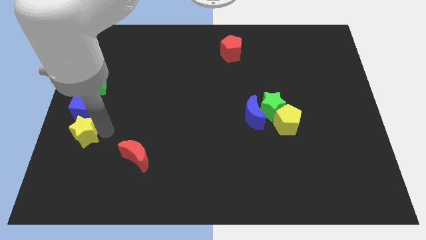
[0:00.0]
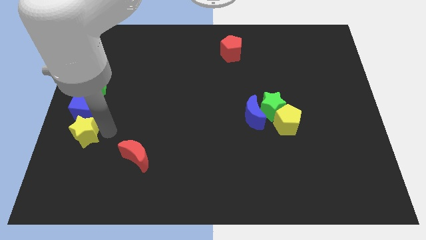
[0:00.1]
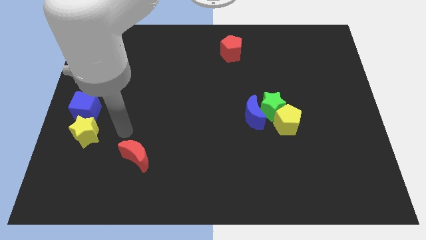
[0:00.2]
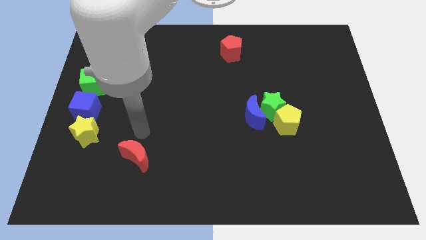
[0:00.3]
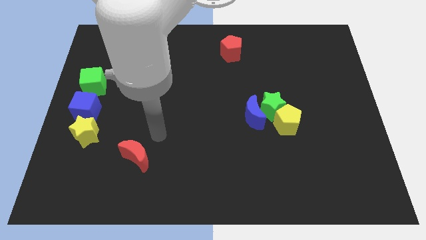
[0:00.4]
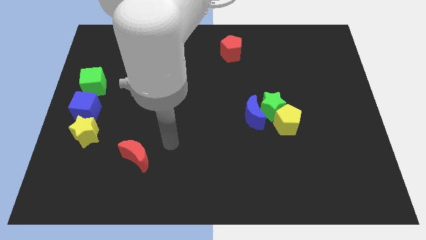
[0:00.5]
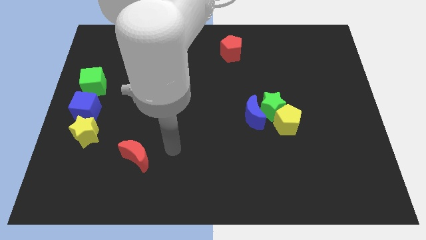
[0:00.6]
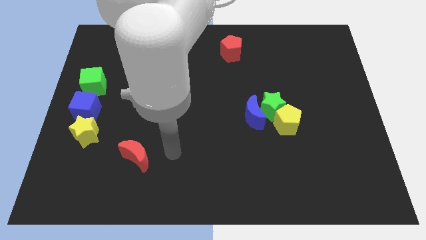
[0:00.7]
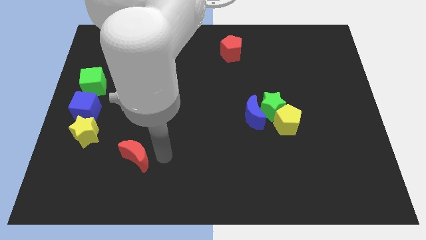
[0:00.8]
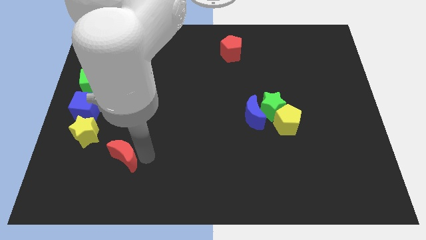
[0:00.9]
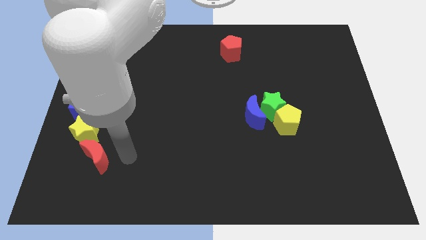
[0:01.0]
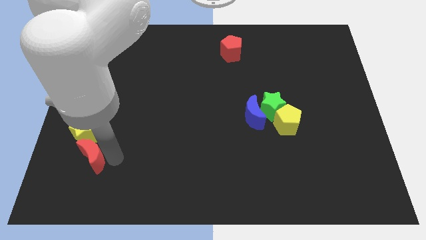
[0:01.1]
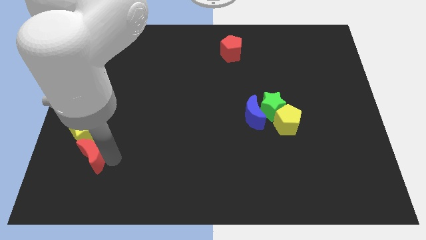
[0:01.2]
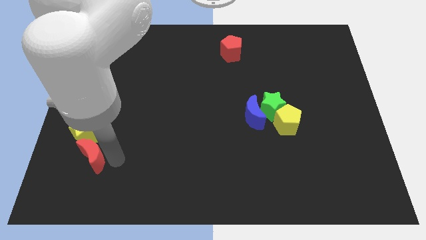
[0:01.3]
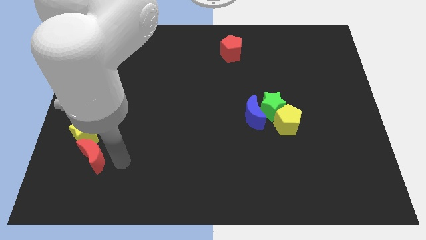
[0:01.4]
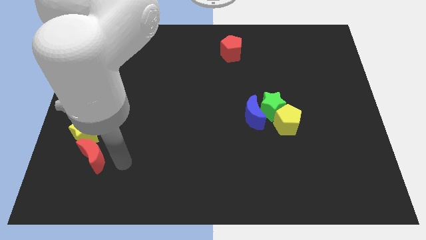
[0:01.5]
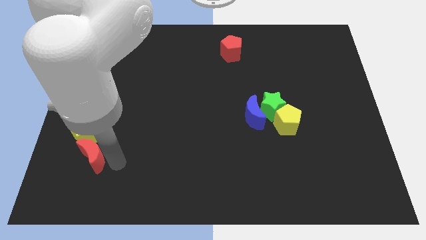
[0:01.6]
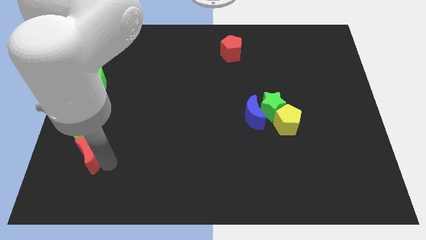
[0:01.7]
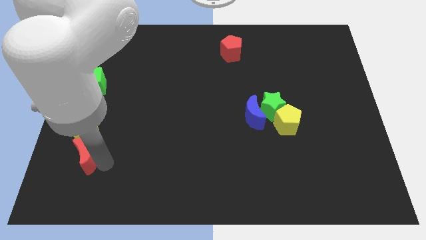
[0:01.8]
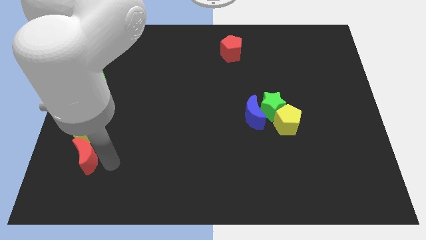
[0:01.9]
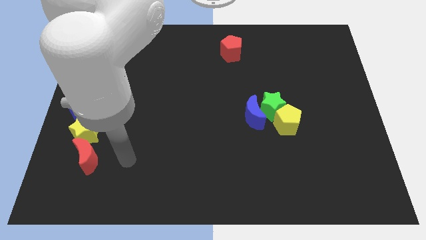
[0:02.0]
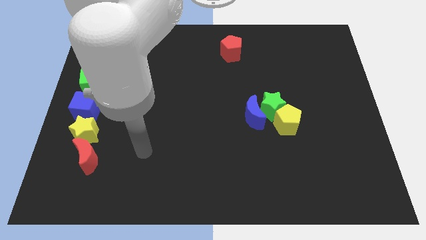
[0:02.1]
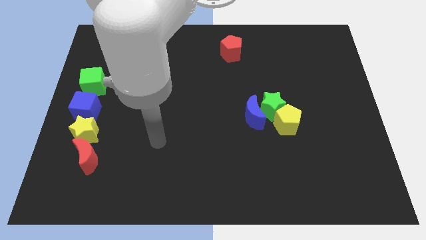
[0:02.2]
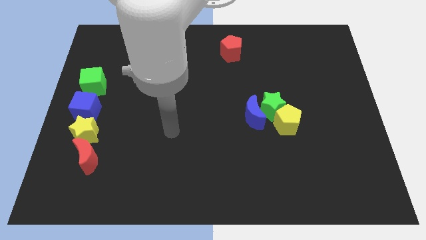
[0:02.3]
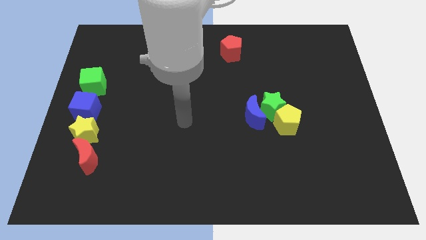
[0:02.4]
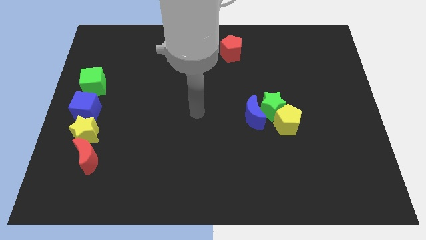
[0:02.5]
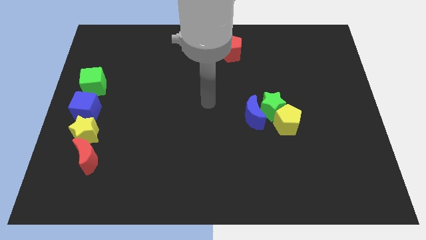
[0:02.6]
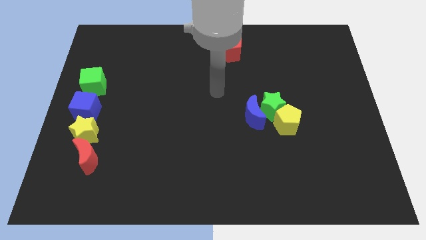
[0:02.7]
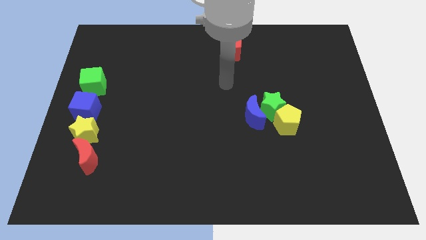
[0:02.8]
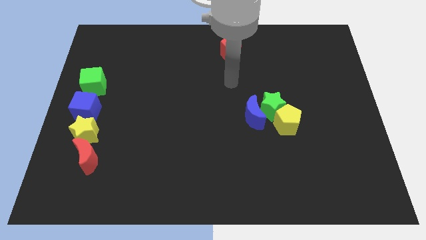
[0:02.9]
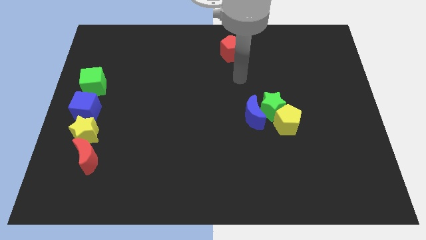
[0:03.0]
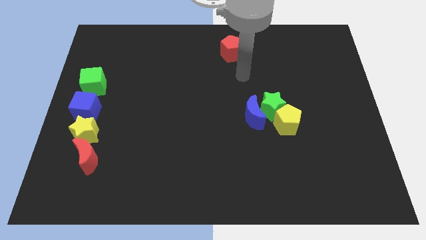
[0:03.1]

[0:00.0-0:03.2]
move the red crescent below the yellow star

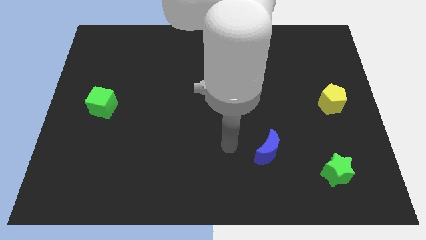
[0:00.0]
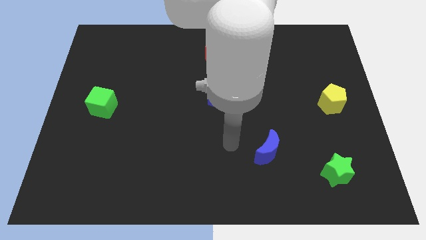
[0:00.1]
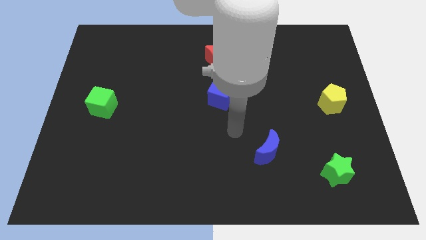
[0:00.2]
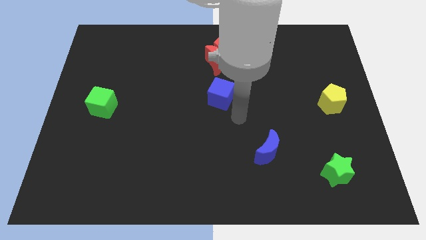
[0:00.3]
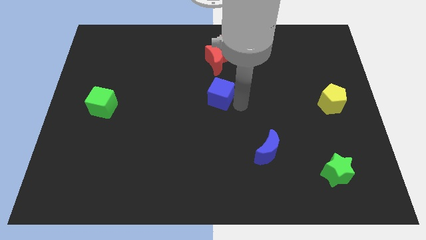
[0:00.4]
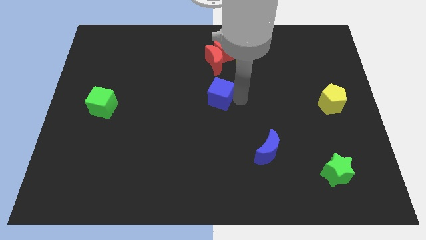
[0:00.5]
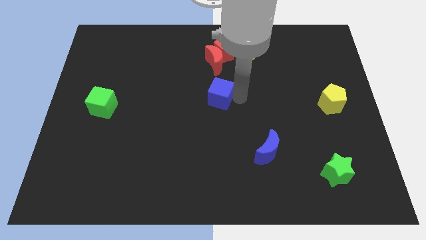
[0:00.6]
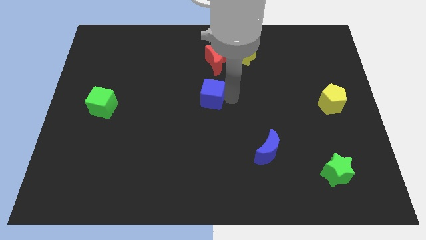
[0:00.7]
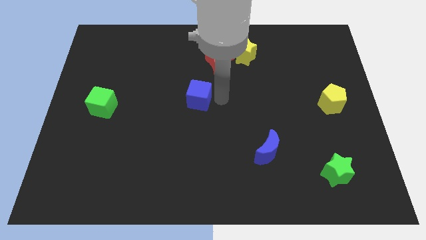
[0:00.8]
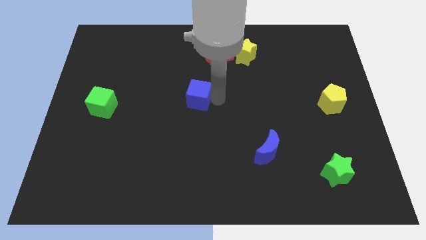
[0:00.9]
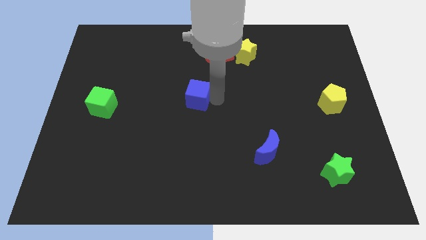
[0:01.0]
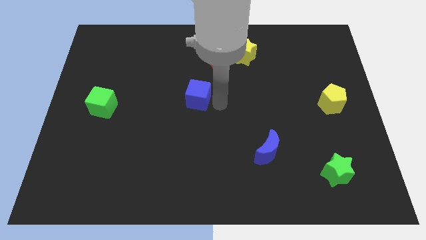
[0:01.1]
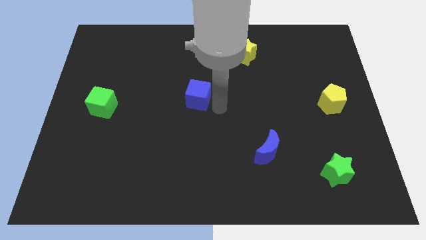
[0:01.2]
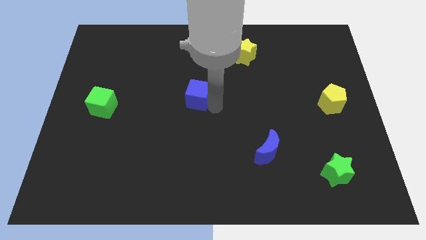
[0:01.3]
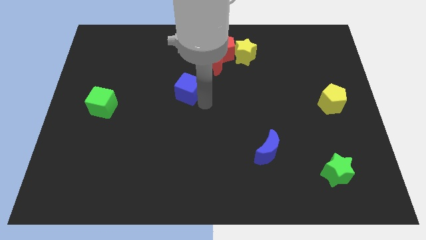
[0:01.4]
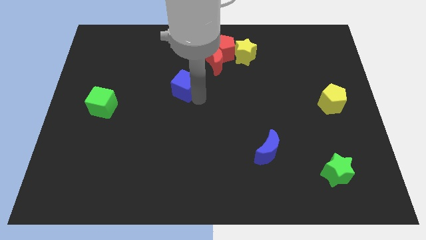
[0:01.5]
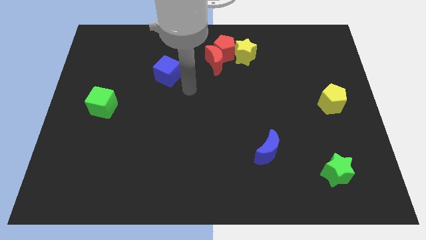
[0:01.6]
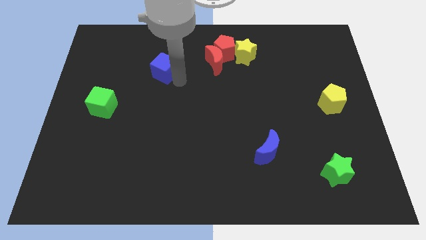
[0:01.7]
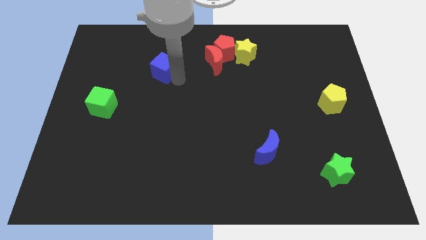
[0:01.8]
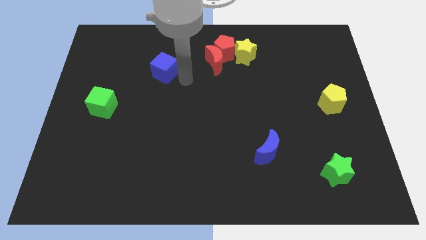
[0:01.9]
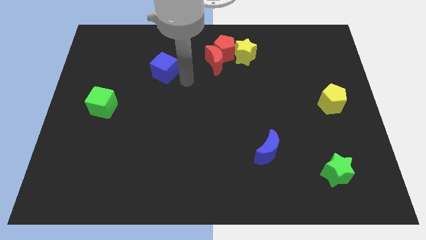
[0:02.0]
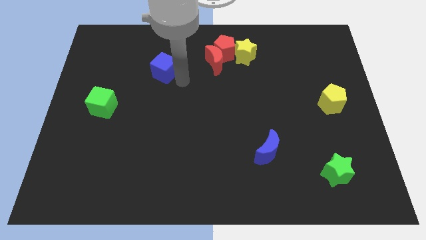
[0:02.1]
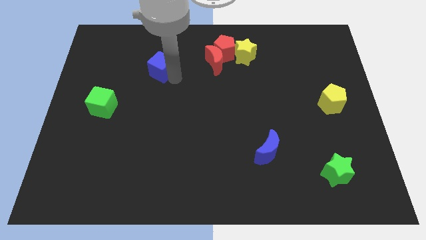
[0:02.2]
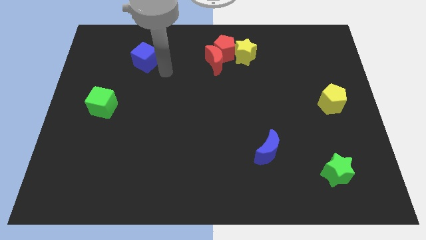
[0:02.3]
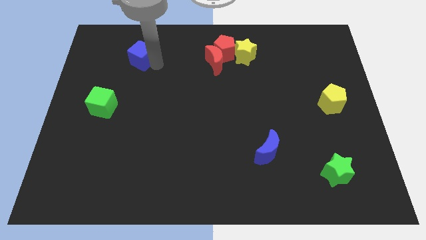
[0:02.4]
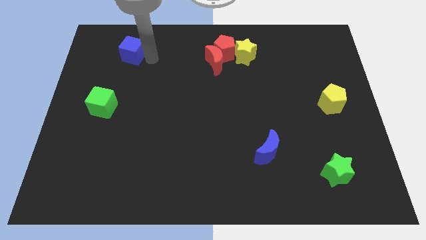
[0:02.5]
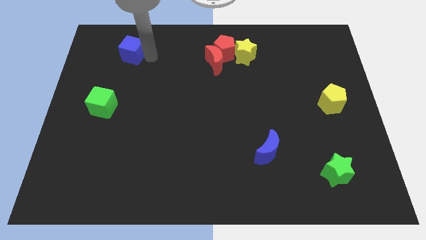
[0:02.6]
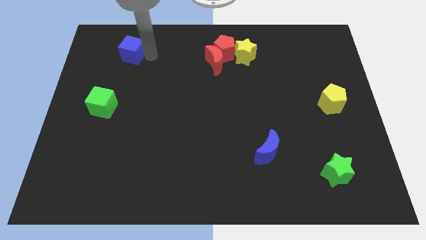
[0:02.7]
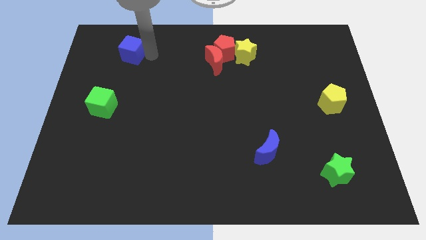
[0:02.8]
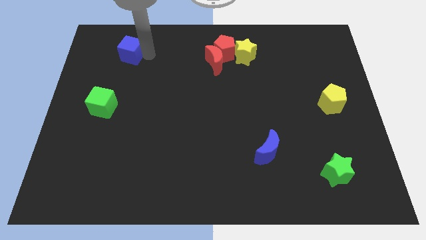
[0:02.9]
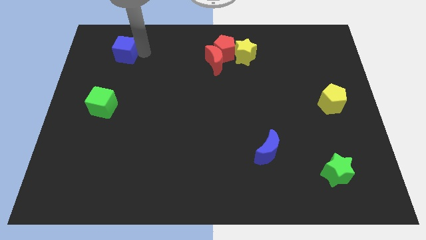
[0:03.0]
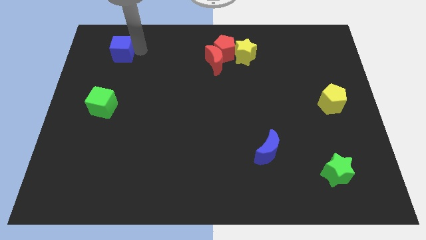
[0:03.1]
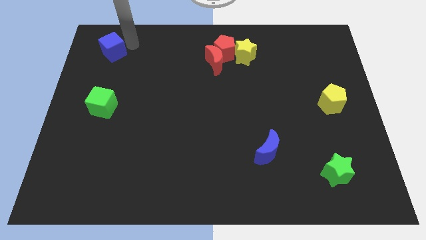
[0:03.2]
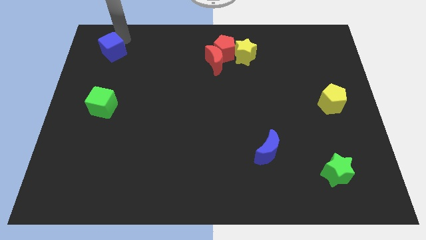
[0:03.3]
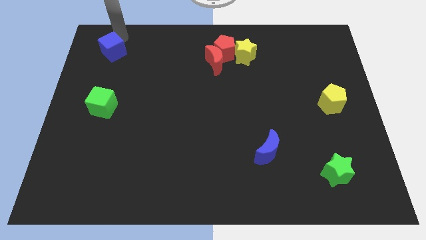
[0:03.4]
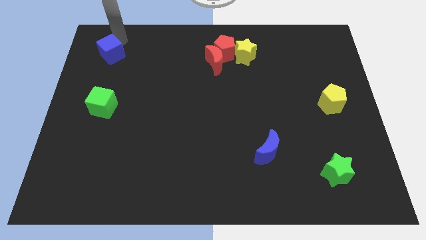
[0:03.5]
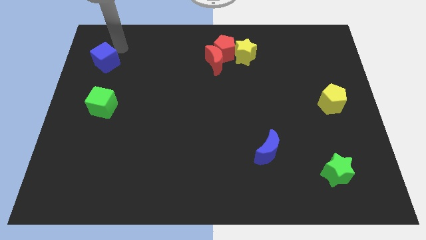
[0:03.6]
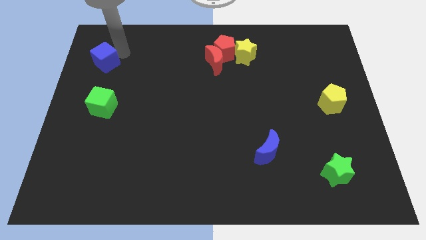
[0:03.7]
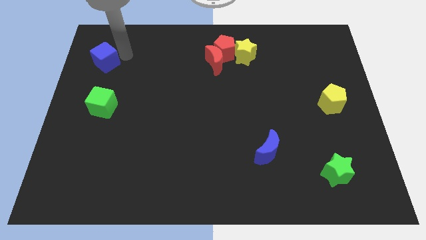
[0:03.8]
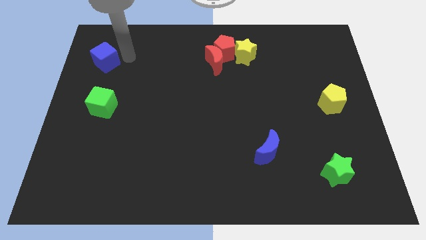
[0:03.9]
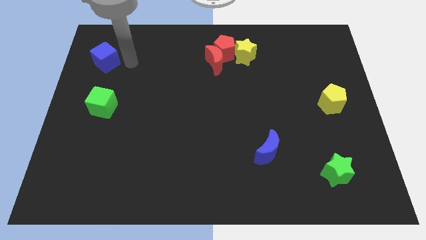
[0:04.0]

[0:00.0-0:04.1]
move the blue cube at the top of green cube

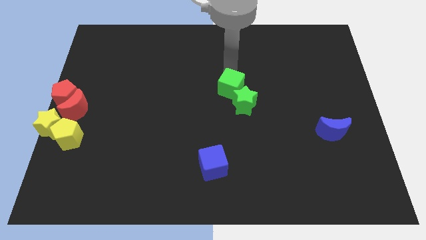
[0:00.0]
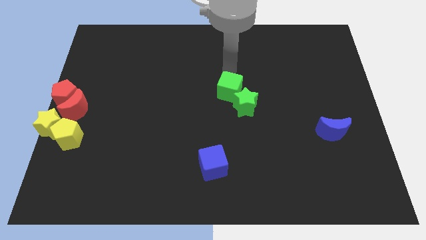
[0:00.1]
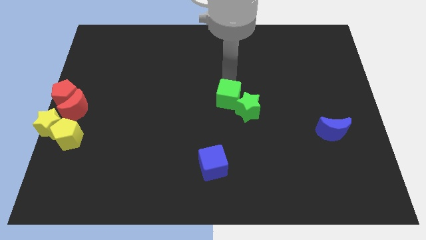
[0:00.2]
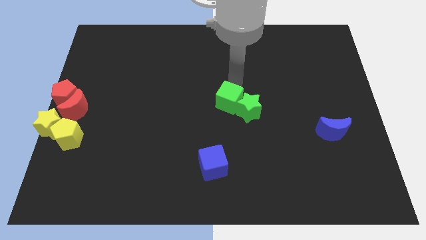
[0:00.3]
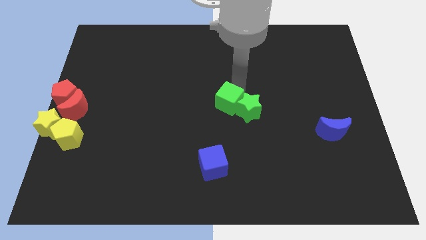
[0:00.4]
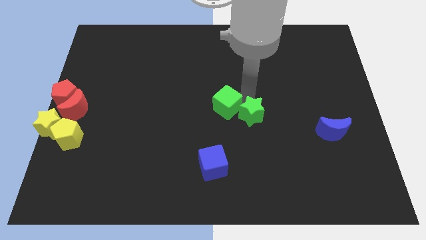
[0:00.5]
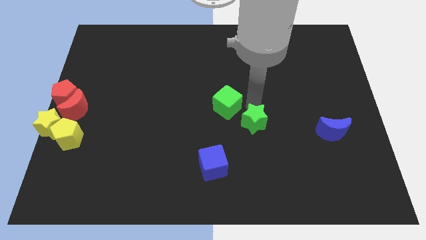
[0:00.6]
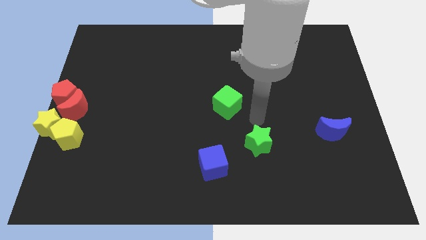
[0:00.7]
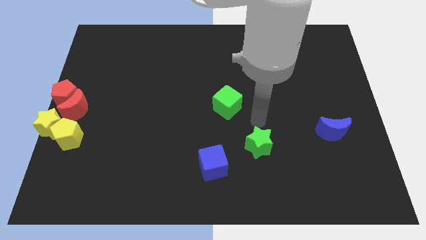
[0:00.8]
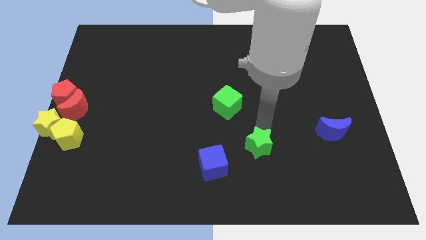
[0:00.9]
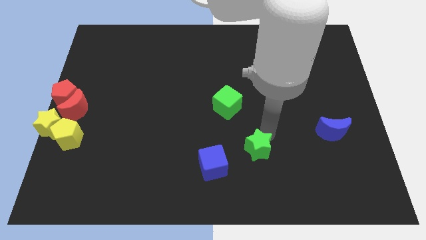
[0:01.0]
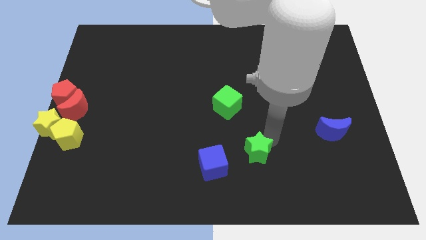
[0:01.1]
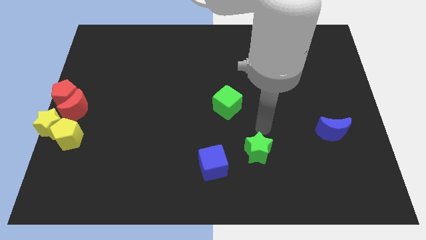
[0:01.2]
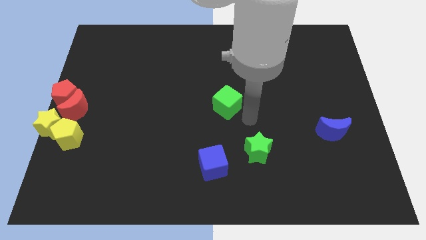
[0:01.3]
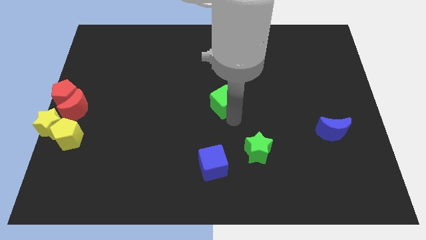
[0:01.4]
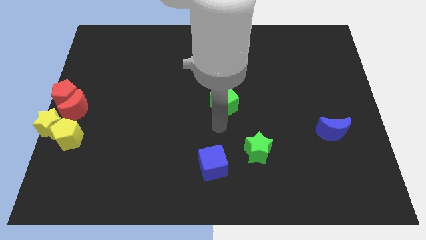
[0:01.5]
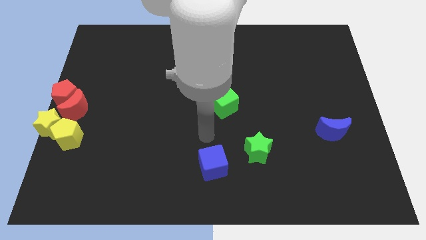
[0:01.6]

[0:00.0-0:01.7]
separate the green star and the green cube
